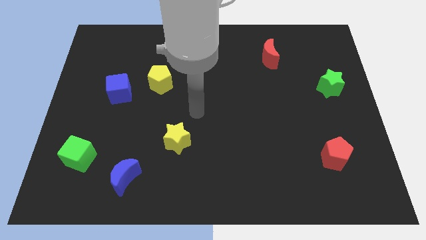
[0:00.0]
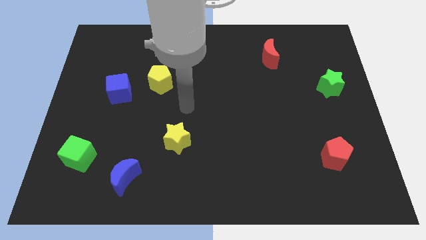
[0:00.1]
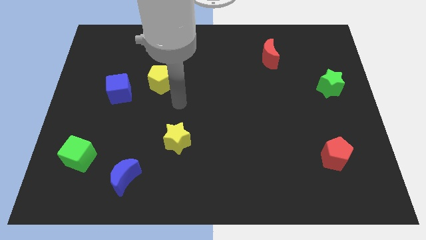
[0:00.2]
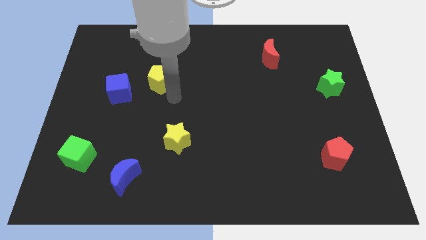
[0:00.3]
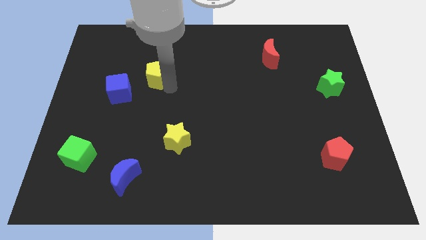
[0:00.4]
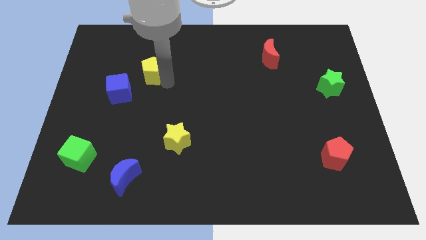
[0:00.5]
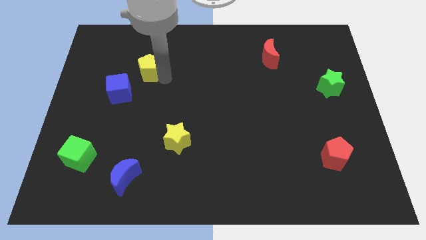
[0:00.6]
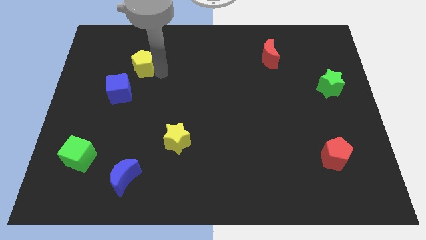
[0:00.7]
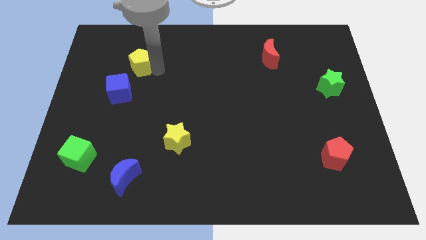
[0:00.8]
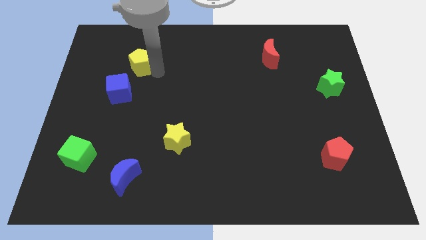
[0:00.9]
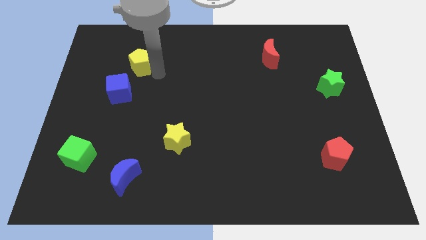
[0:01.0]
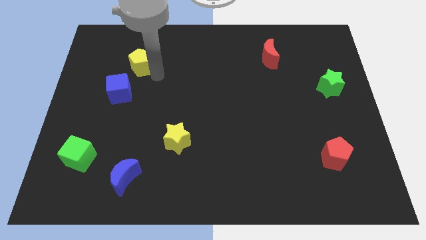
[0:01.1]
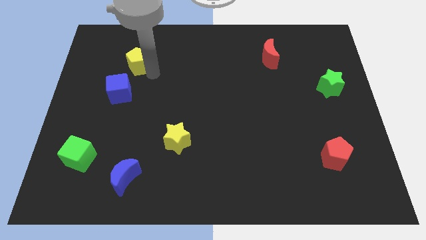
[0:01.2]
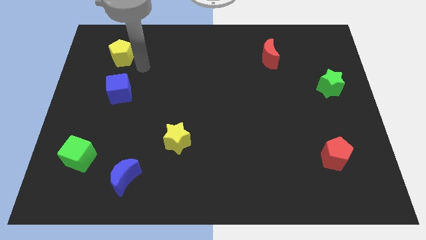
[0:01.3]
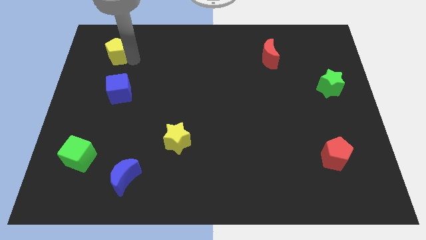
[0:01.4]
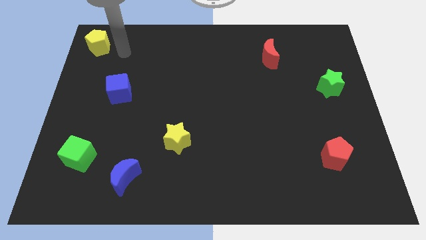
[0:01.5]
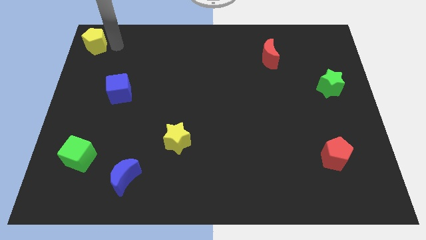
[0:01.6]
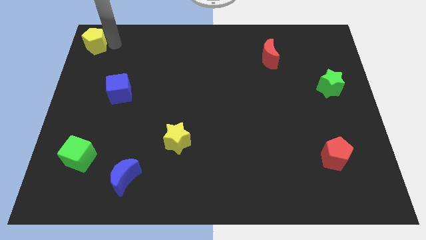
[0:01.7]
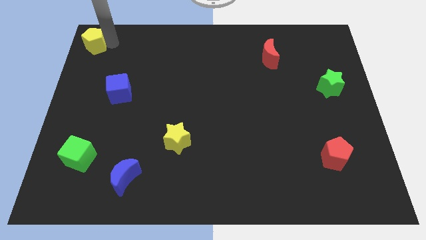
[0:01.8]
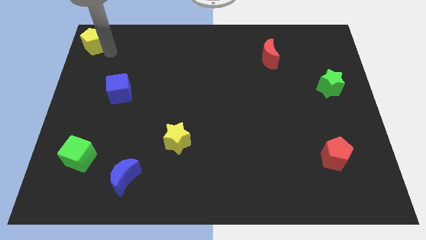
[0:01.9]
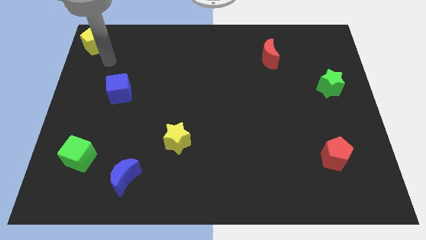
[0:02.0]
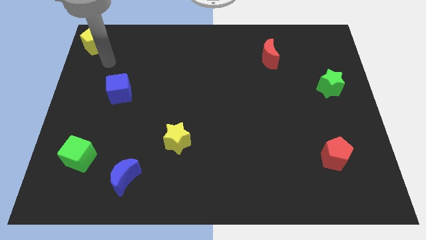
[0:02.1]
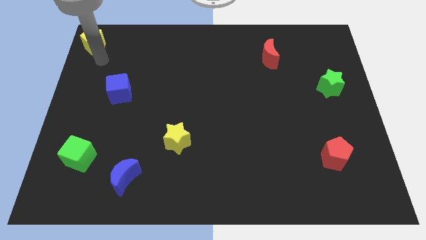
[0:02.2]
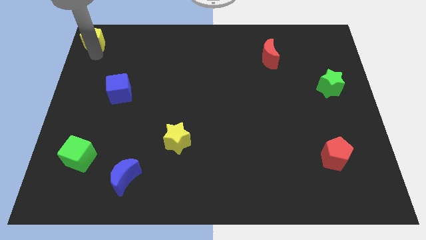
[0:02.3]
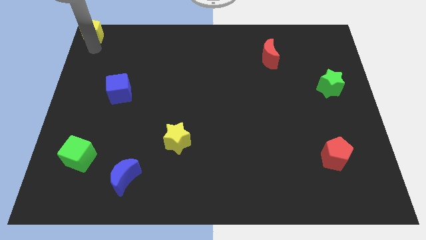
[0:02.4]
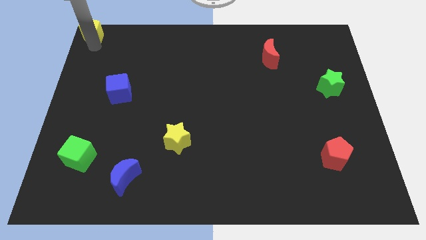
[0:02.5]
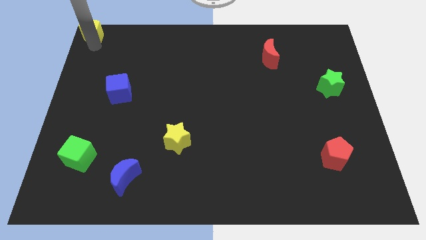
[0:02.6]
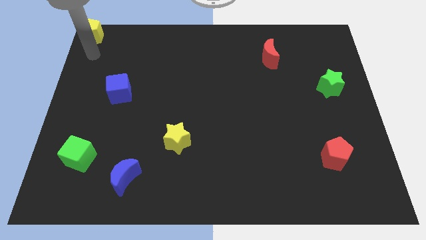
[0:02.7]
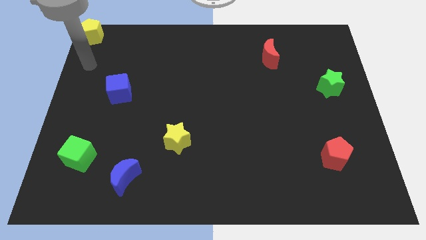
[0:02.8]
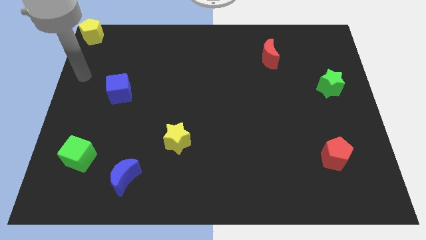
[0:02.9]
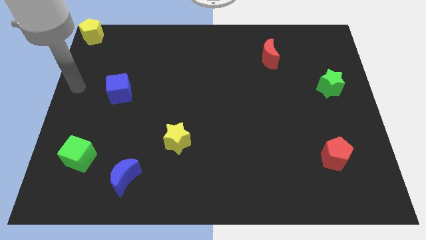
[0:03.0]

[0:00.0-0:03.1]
place the yellow pentagon at the top left of the board

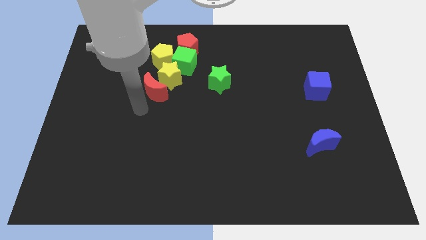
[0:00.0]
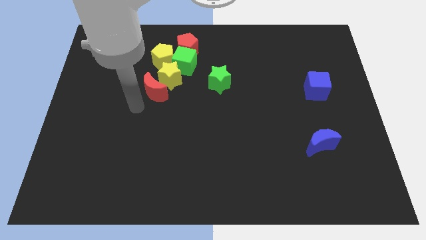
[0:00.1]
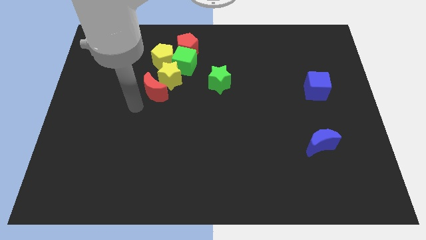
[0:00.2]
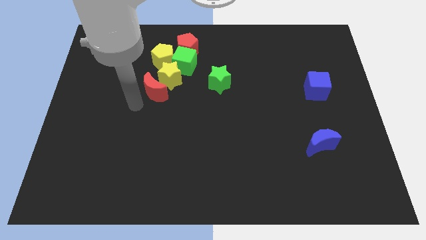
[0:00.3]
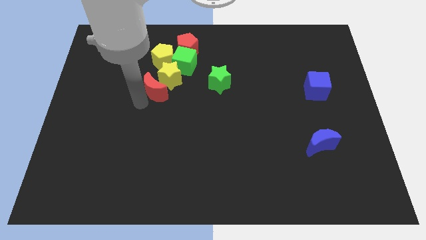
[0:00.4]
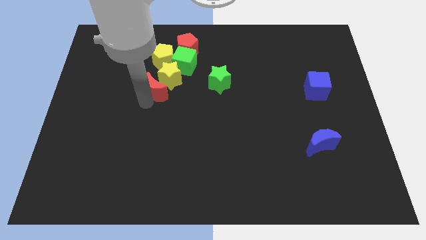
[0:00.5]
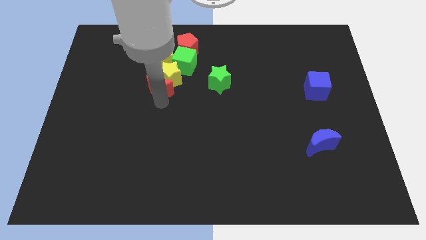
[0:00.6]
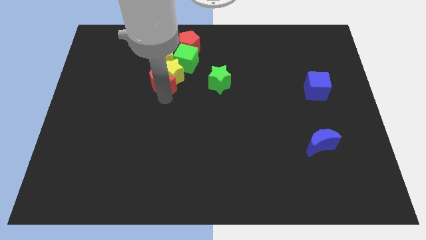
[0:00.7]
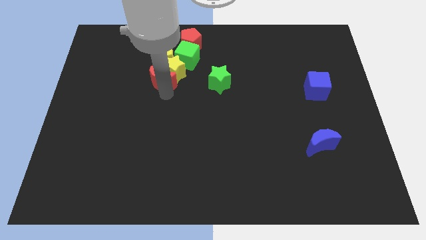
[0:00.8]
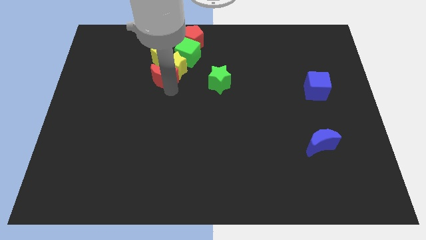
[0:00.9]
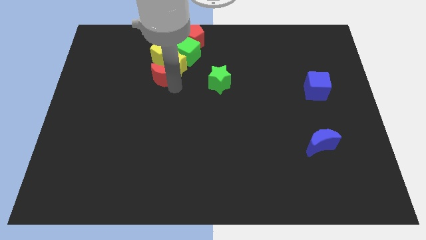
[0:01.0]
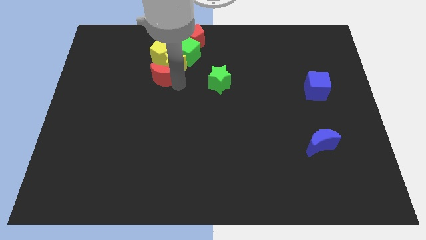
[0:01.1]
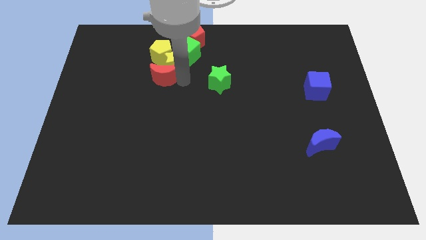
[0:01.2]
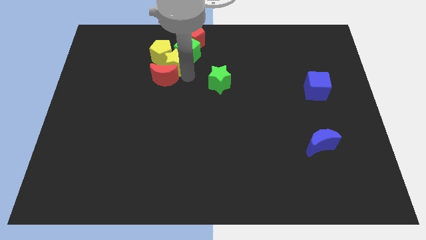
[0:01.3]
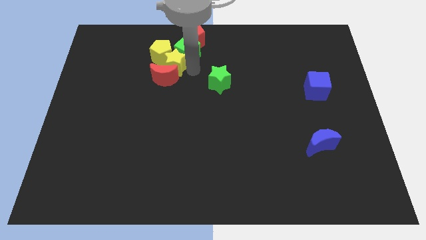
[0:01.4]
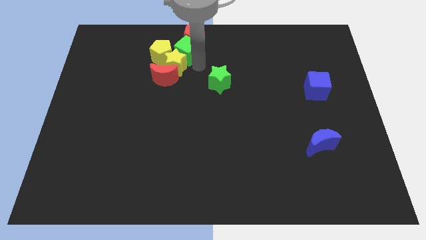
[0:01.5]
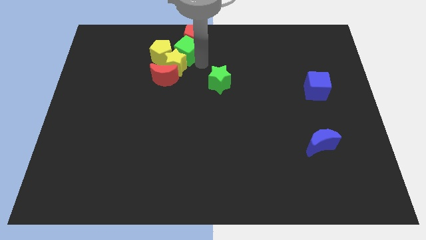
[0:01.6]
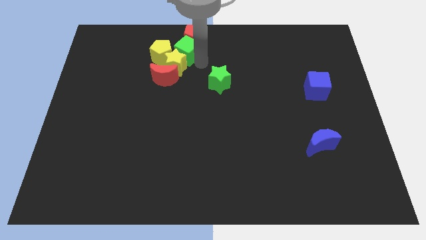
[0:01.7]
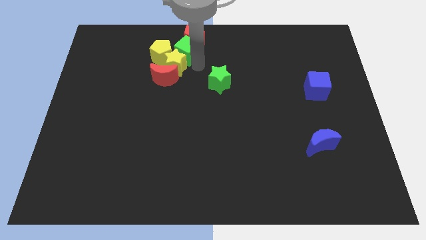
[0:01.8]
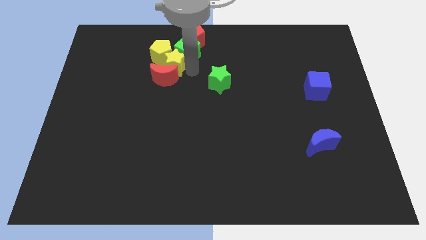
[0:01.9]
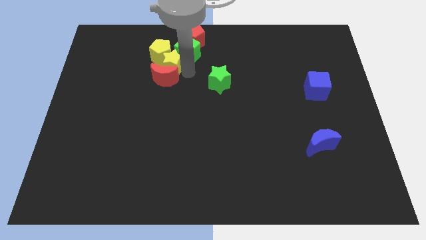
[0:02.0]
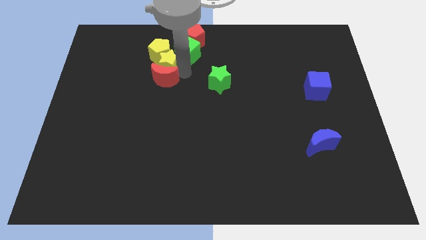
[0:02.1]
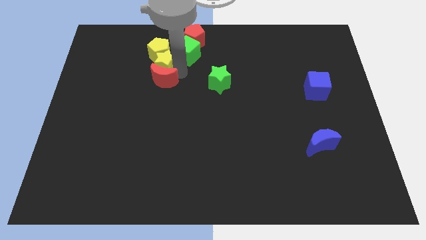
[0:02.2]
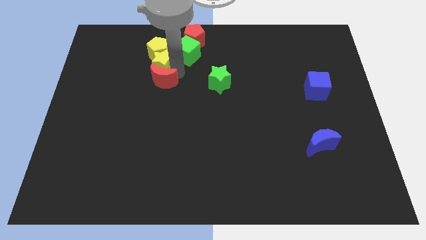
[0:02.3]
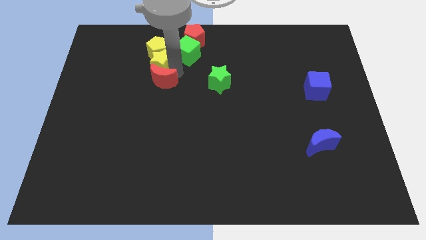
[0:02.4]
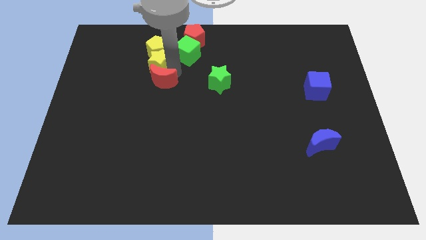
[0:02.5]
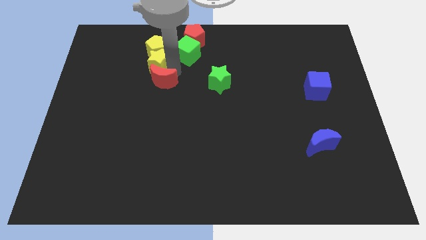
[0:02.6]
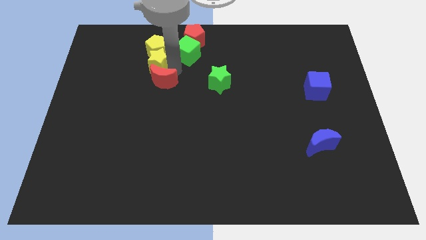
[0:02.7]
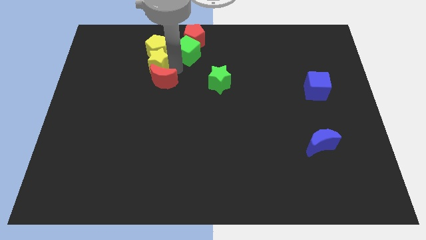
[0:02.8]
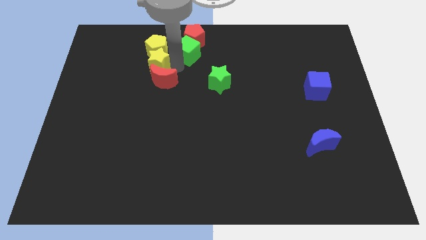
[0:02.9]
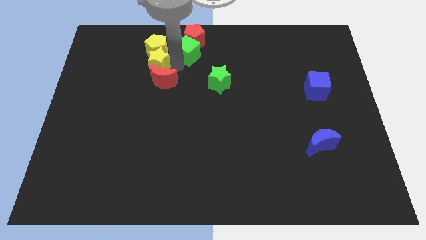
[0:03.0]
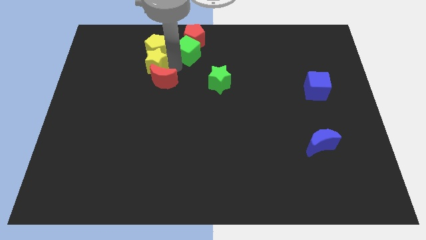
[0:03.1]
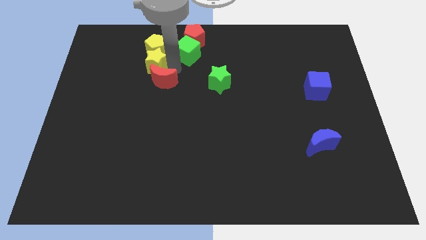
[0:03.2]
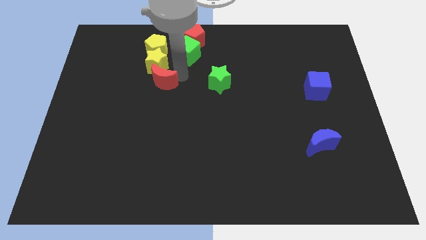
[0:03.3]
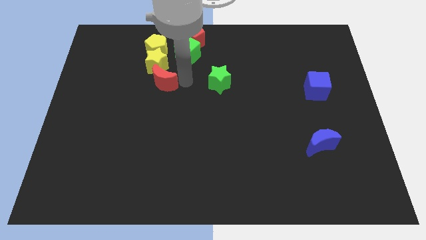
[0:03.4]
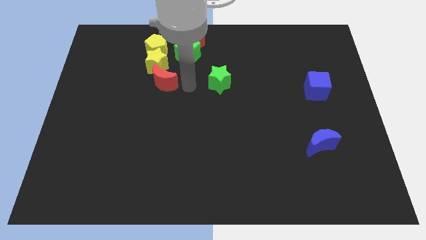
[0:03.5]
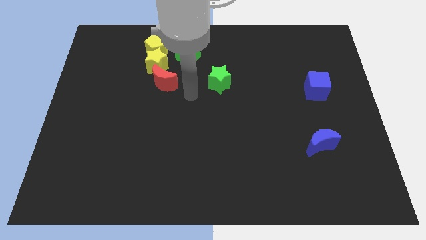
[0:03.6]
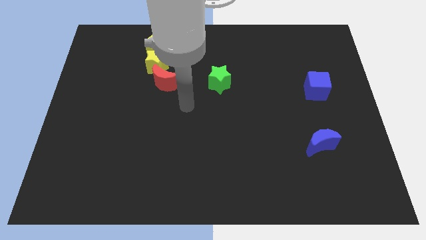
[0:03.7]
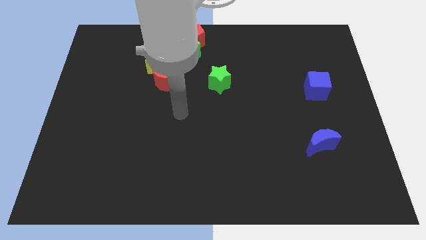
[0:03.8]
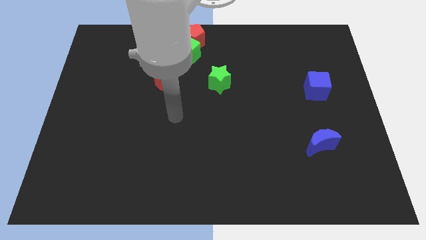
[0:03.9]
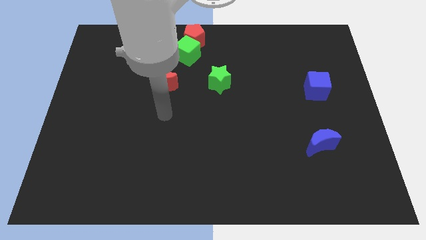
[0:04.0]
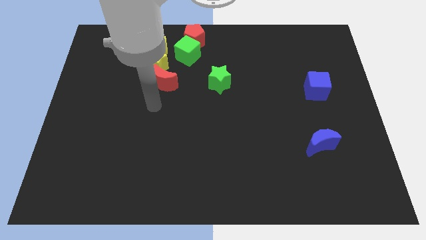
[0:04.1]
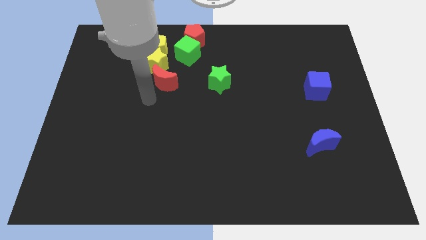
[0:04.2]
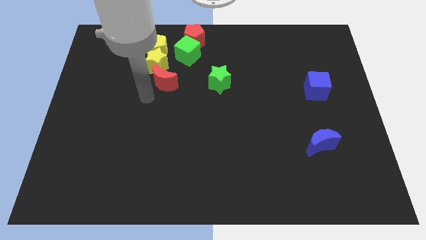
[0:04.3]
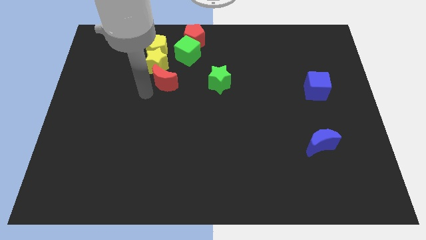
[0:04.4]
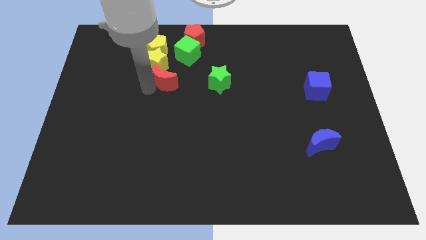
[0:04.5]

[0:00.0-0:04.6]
push the red crescent into the yellow star

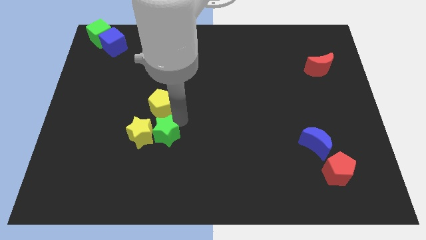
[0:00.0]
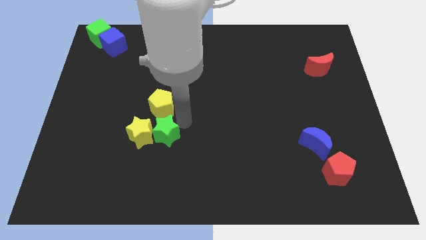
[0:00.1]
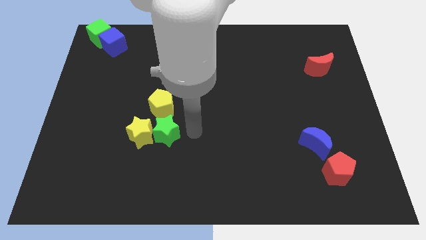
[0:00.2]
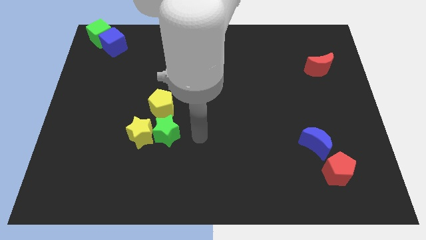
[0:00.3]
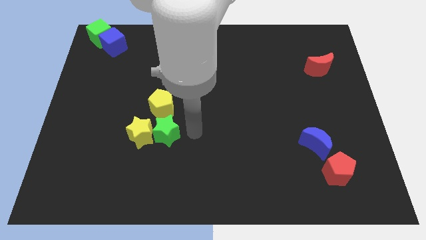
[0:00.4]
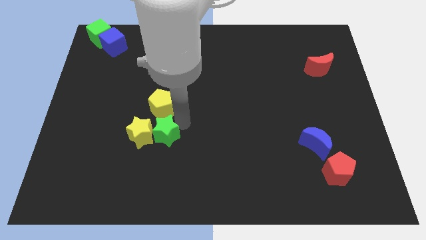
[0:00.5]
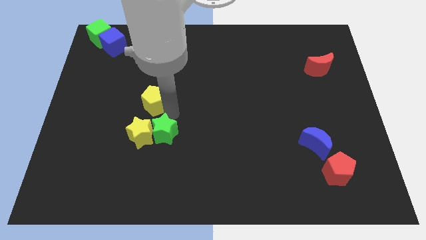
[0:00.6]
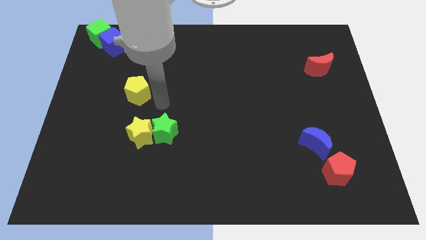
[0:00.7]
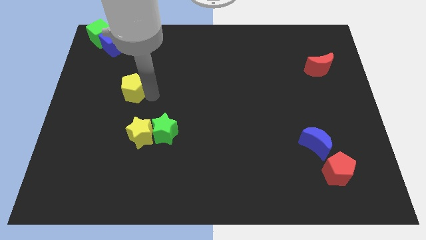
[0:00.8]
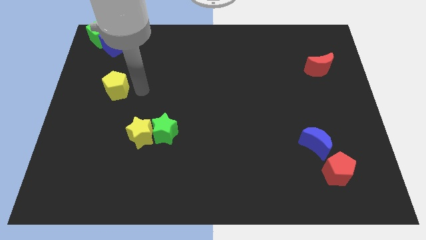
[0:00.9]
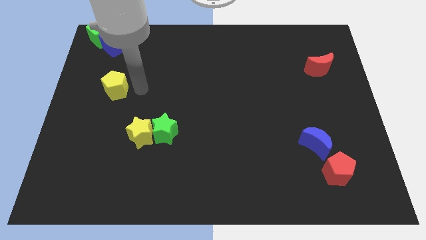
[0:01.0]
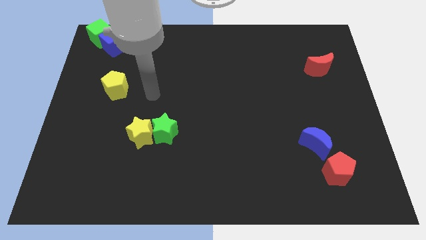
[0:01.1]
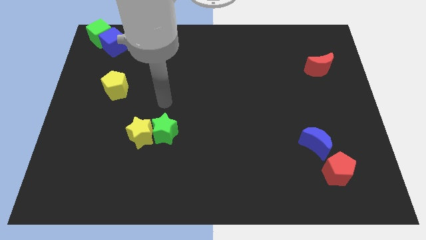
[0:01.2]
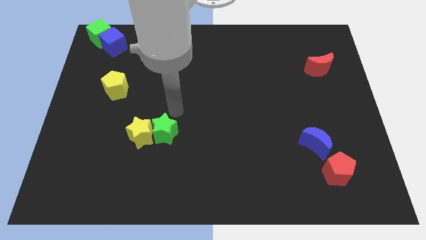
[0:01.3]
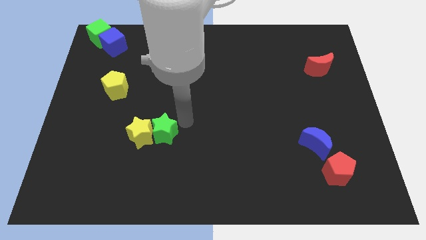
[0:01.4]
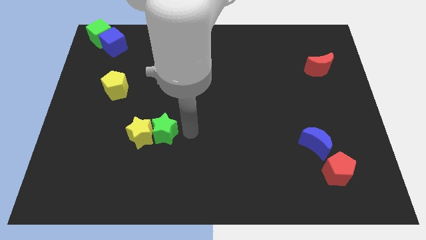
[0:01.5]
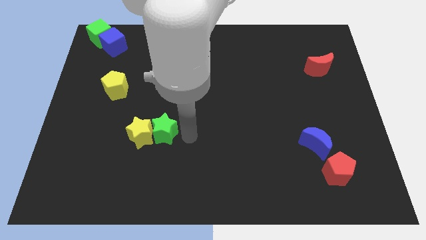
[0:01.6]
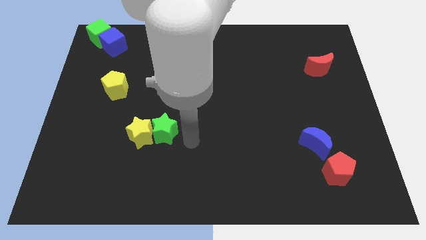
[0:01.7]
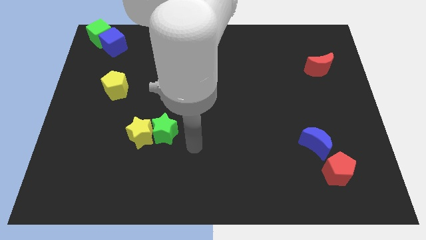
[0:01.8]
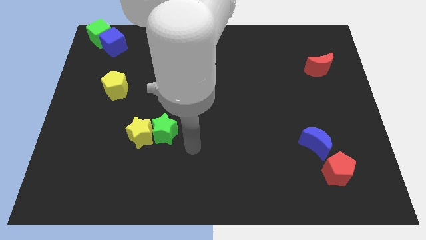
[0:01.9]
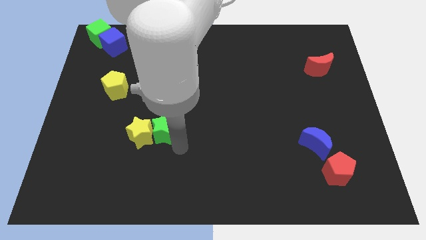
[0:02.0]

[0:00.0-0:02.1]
push the yellow pentagon towards the top left
